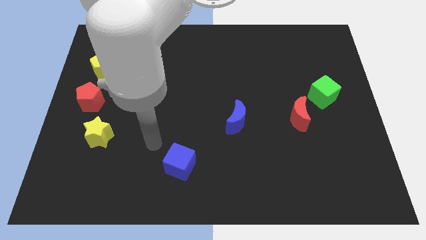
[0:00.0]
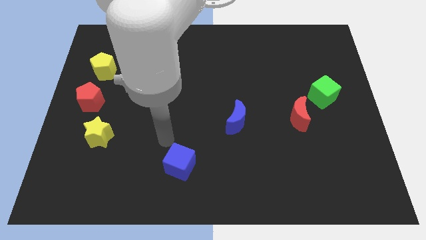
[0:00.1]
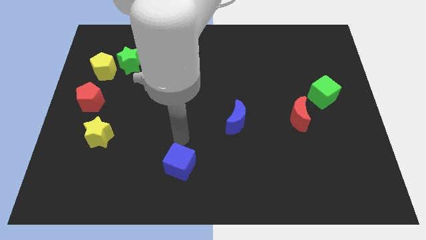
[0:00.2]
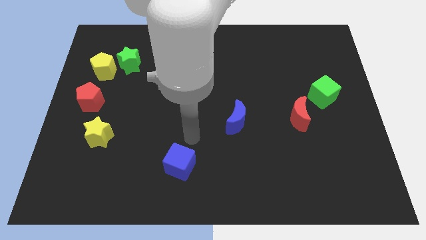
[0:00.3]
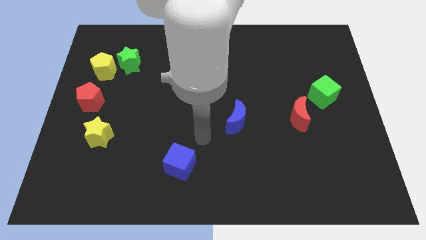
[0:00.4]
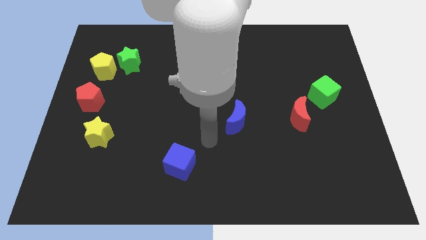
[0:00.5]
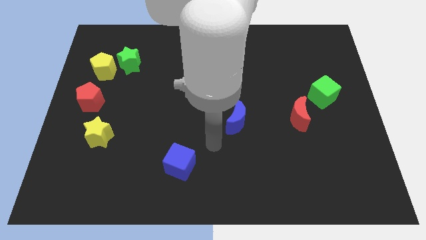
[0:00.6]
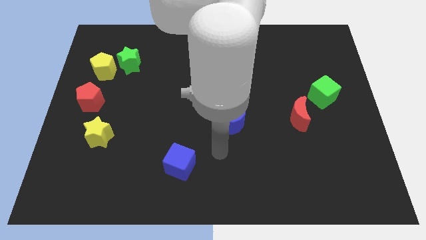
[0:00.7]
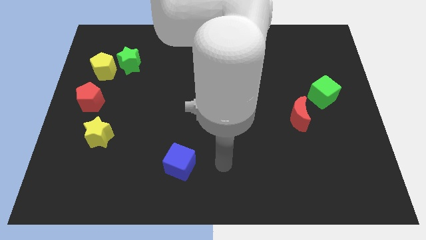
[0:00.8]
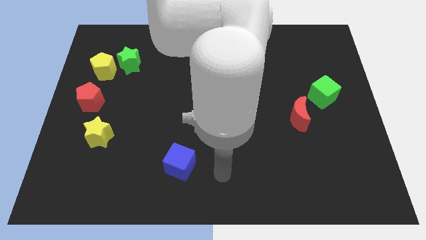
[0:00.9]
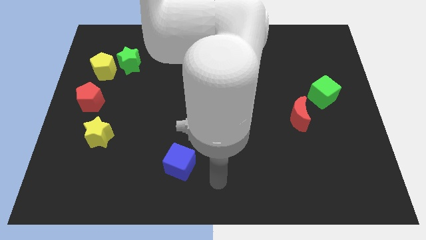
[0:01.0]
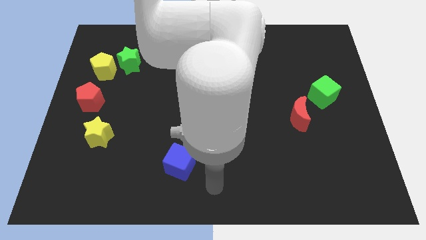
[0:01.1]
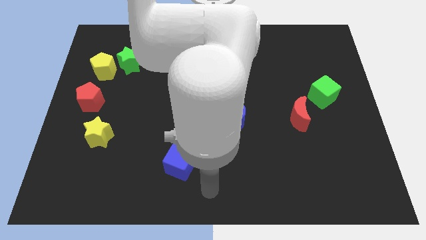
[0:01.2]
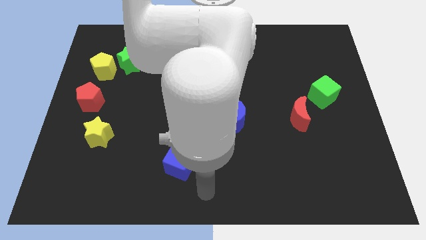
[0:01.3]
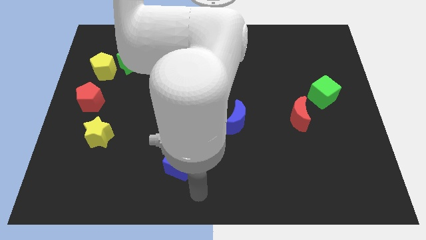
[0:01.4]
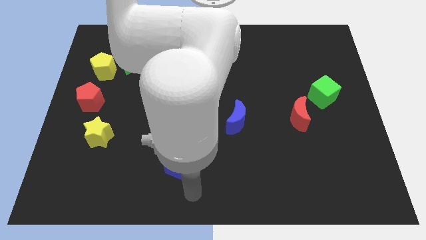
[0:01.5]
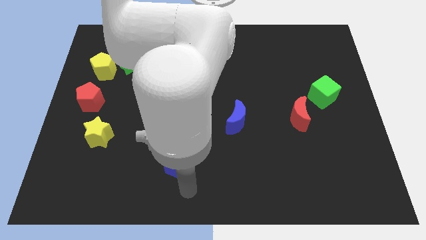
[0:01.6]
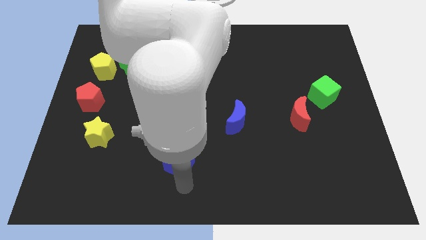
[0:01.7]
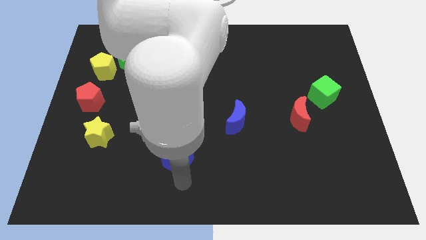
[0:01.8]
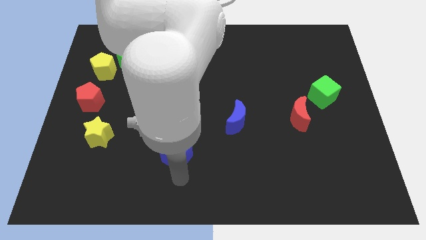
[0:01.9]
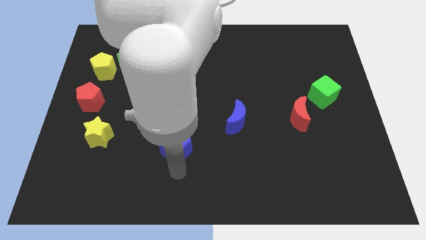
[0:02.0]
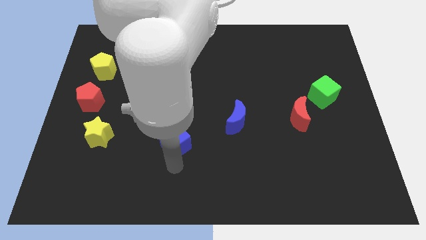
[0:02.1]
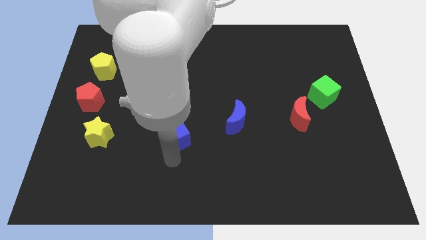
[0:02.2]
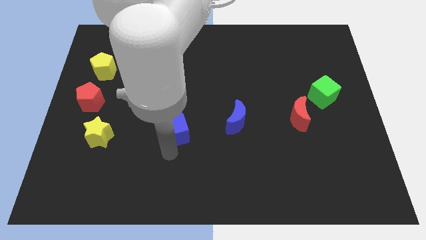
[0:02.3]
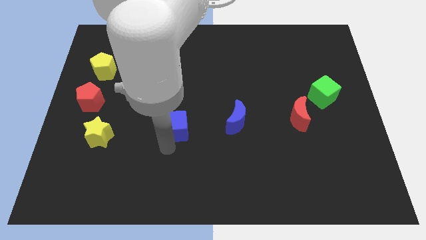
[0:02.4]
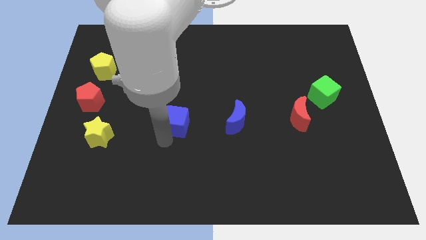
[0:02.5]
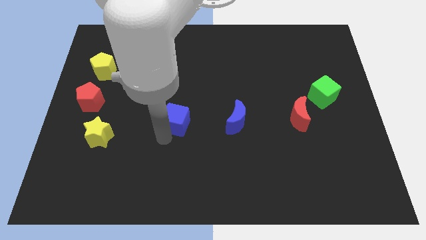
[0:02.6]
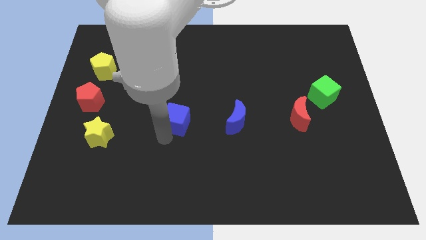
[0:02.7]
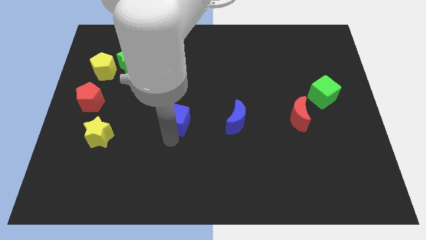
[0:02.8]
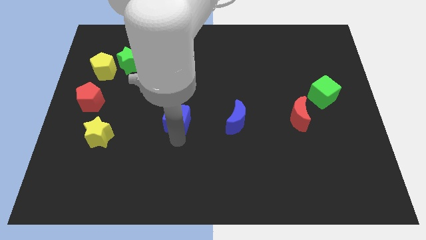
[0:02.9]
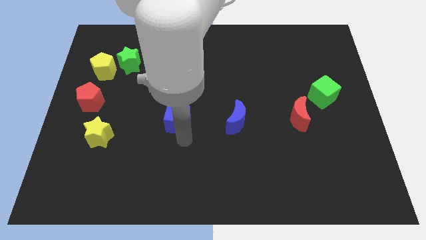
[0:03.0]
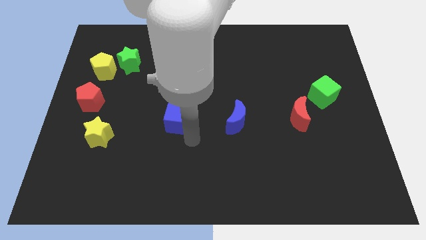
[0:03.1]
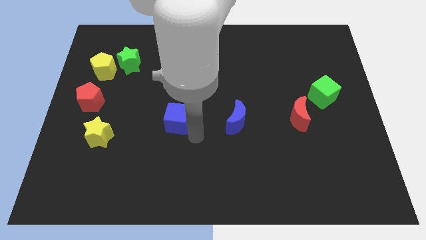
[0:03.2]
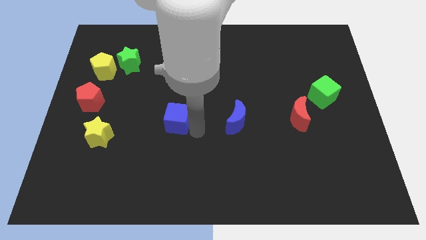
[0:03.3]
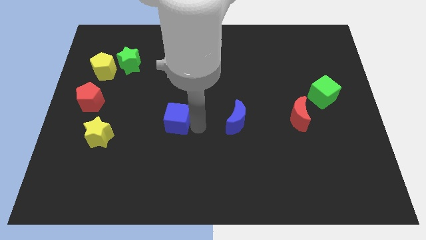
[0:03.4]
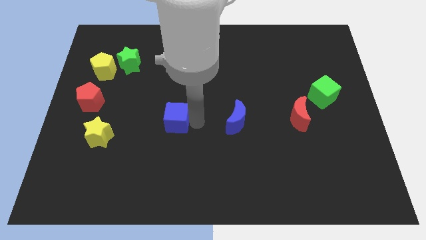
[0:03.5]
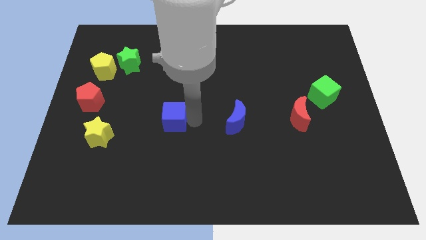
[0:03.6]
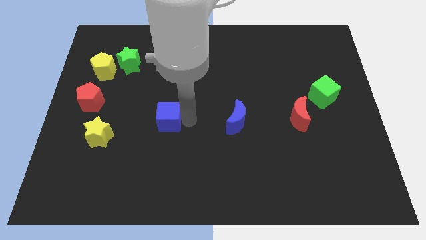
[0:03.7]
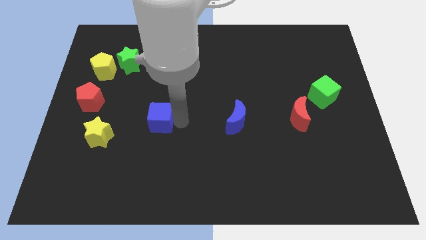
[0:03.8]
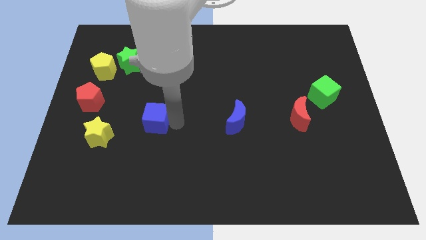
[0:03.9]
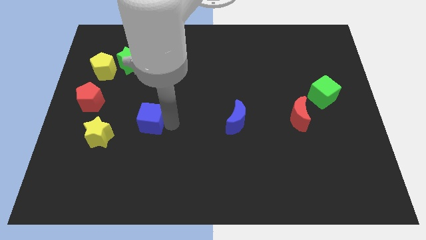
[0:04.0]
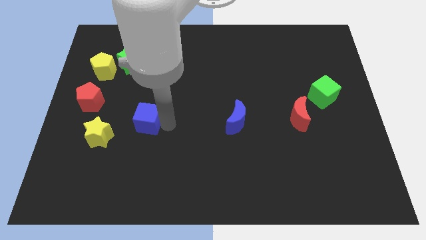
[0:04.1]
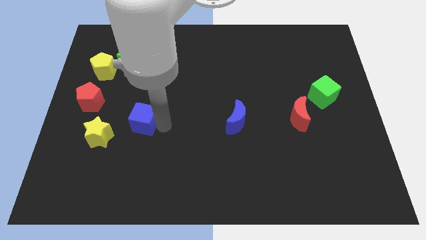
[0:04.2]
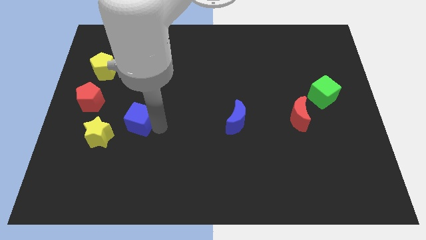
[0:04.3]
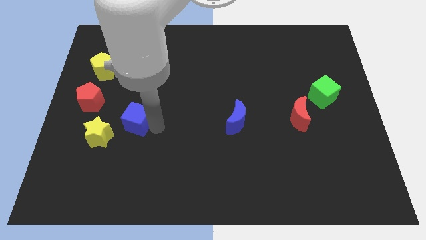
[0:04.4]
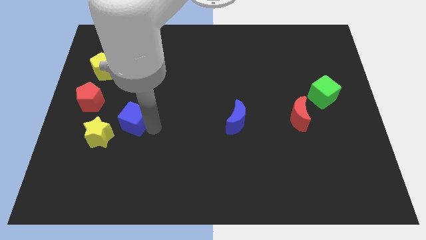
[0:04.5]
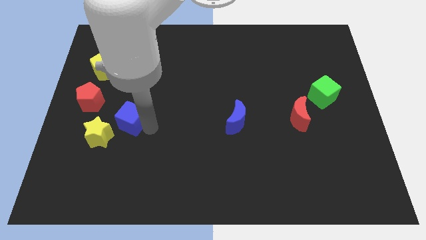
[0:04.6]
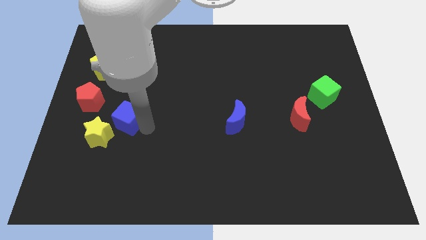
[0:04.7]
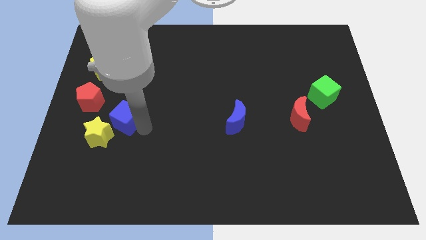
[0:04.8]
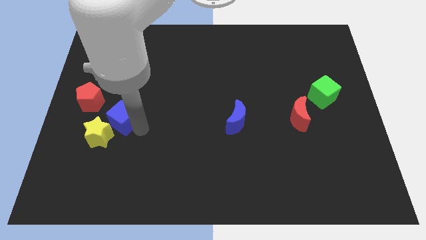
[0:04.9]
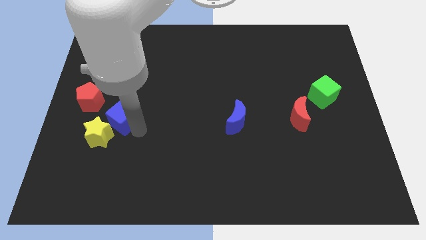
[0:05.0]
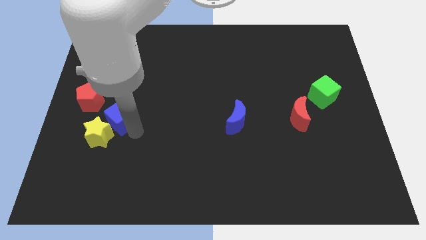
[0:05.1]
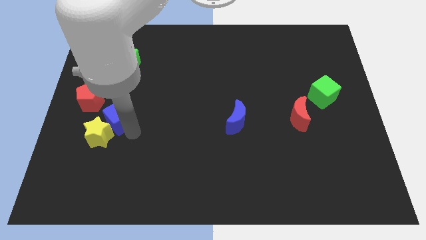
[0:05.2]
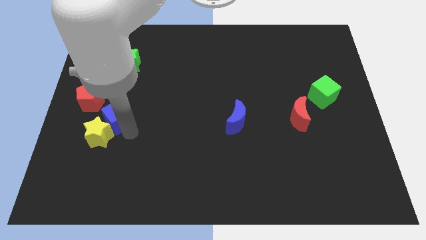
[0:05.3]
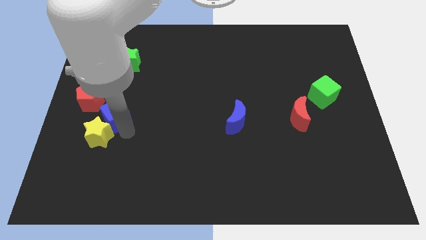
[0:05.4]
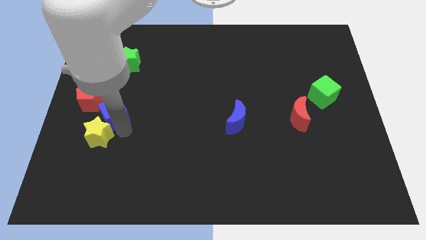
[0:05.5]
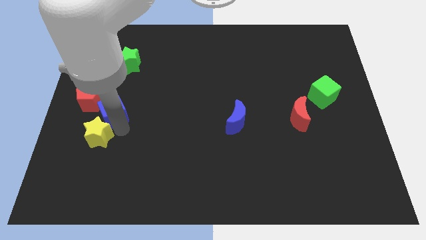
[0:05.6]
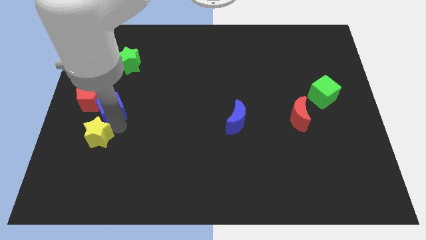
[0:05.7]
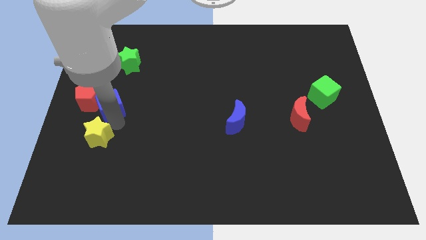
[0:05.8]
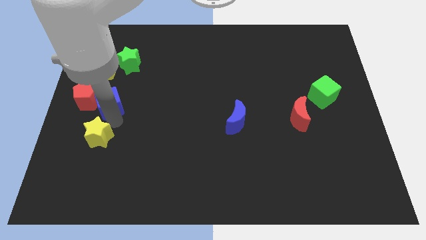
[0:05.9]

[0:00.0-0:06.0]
put the blue cube towards the red pentagon

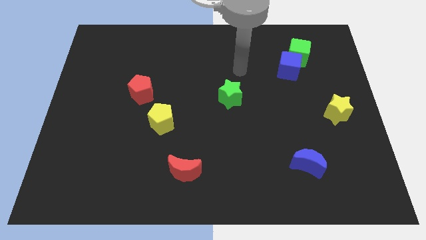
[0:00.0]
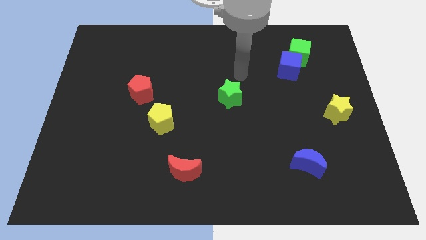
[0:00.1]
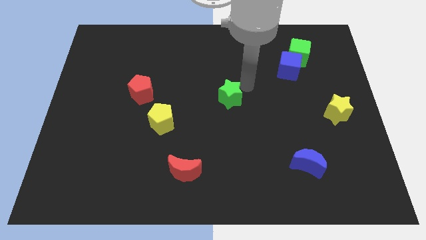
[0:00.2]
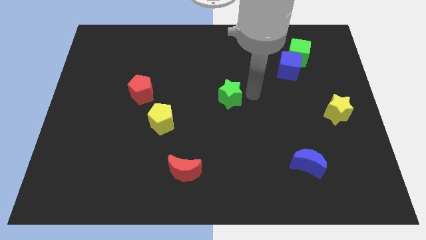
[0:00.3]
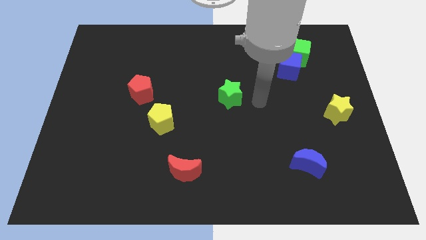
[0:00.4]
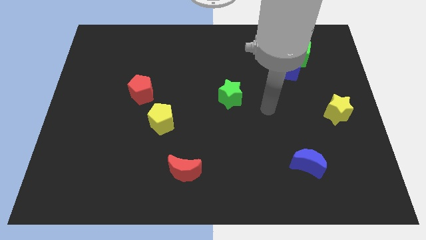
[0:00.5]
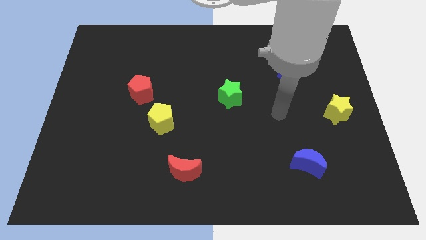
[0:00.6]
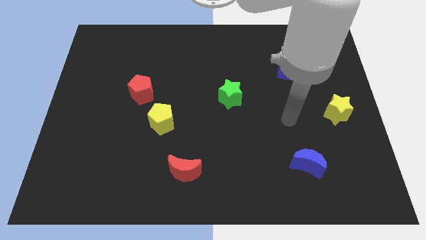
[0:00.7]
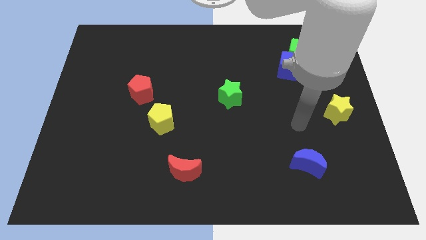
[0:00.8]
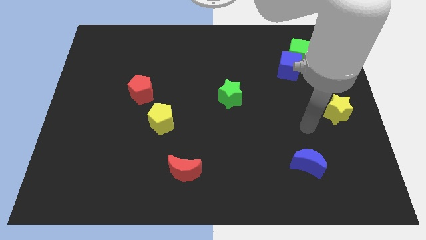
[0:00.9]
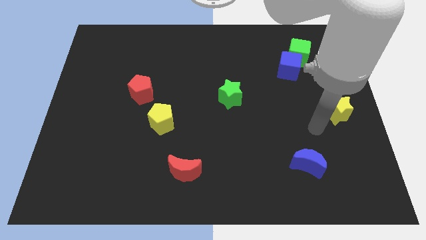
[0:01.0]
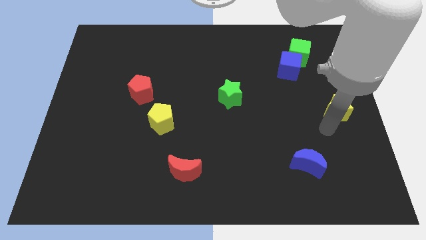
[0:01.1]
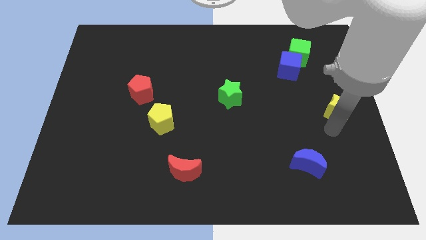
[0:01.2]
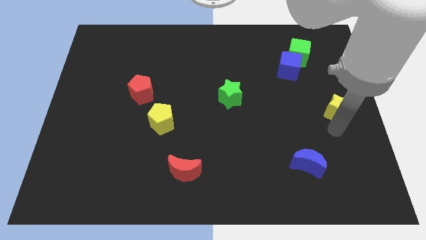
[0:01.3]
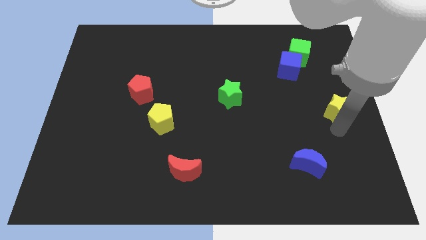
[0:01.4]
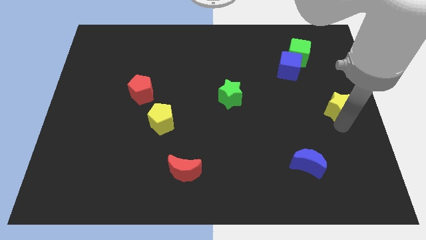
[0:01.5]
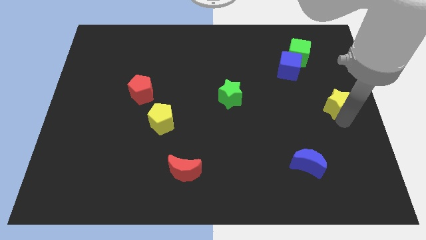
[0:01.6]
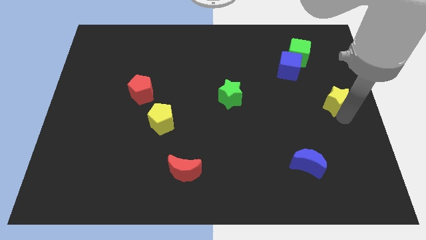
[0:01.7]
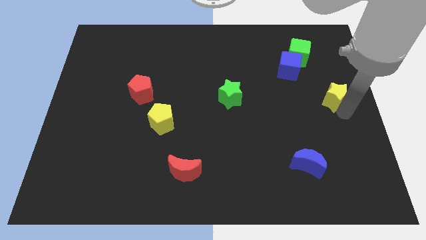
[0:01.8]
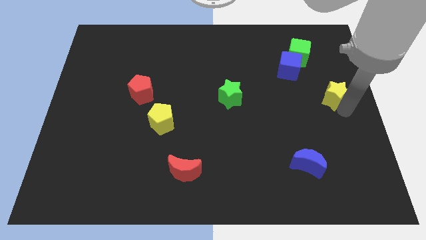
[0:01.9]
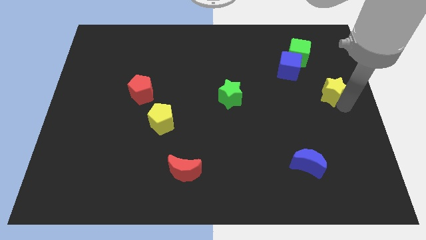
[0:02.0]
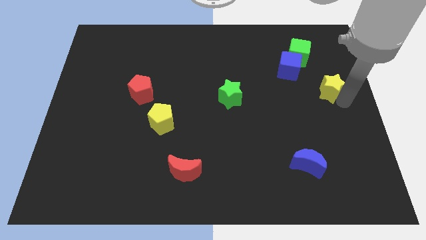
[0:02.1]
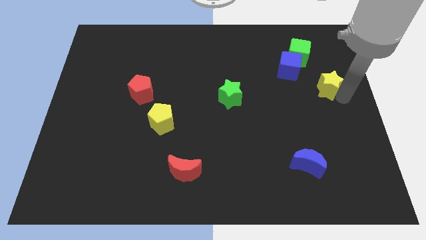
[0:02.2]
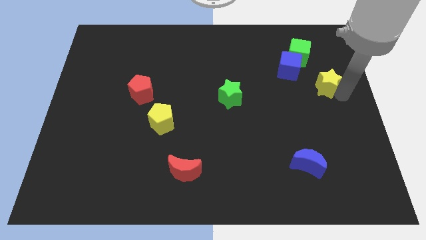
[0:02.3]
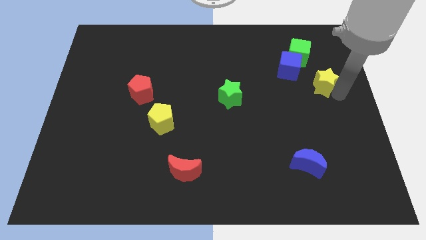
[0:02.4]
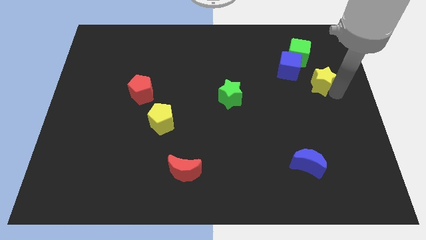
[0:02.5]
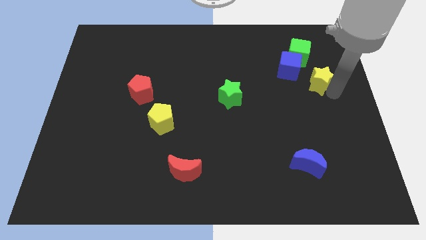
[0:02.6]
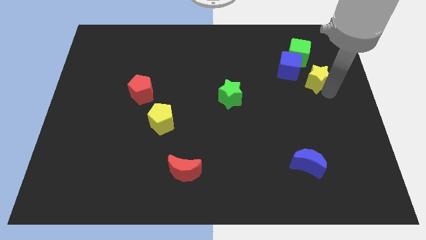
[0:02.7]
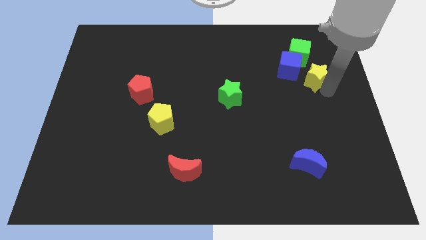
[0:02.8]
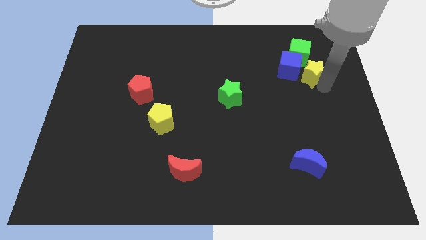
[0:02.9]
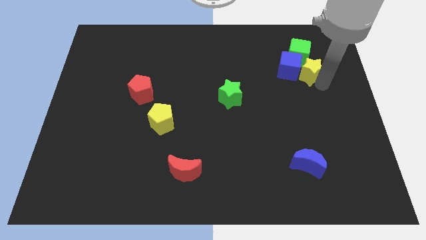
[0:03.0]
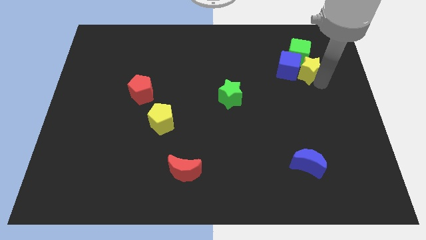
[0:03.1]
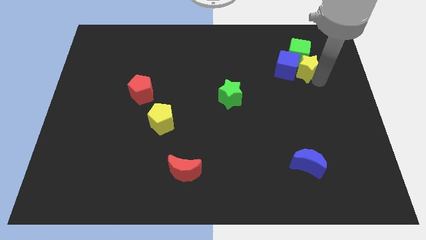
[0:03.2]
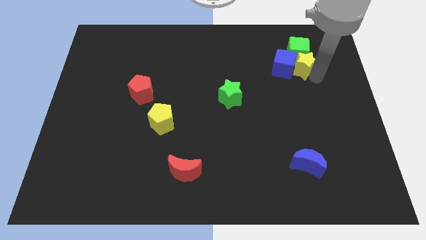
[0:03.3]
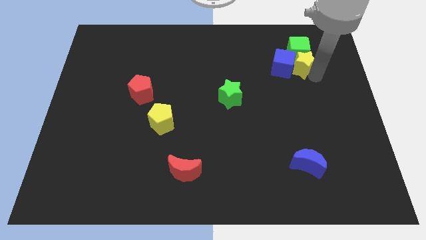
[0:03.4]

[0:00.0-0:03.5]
push the yellow star close to the green cube
